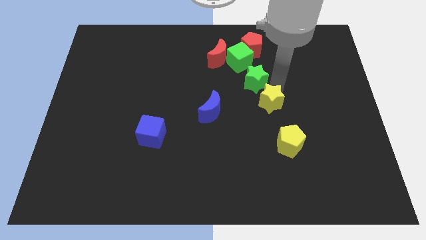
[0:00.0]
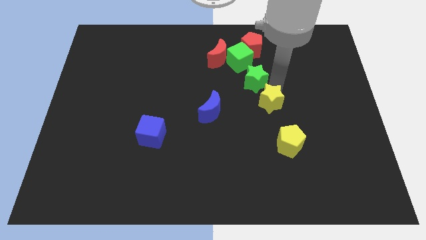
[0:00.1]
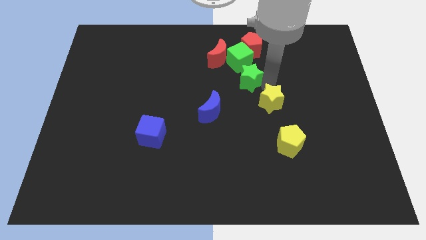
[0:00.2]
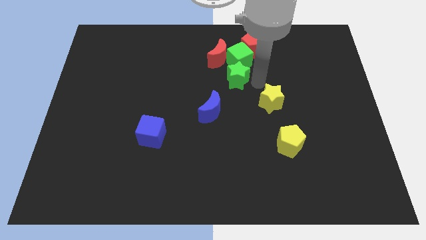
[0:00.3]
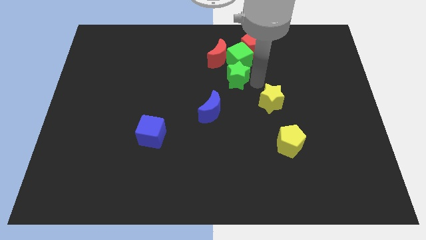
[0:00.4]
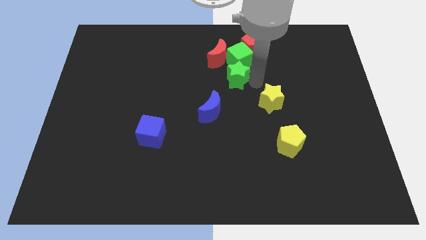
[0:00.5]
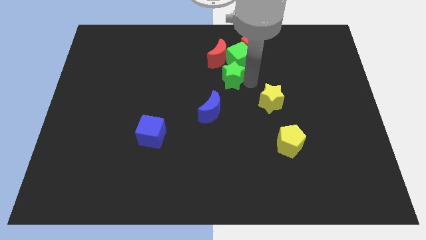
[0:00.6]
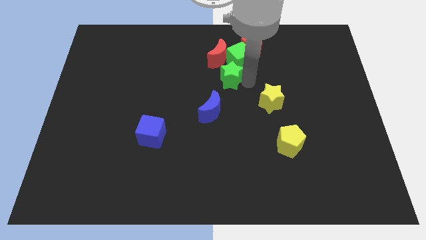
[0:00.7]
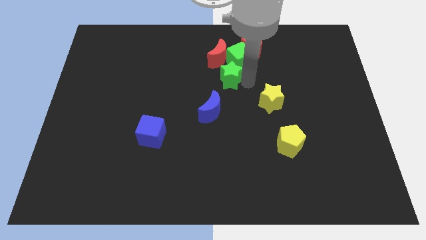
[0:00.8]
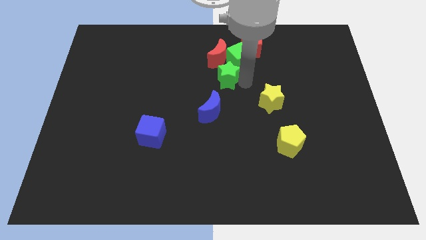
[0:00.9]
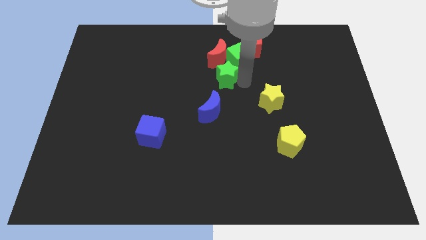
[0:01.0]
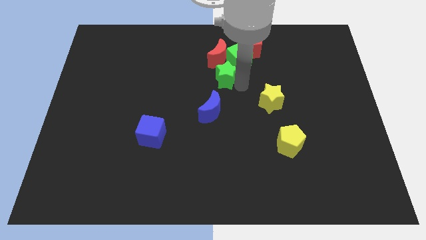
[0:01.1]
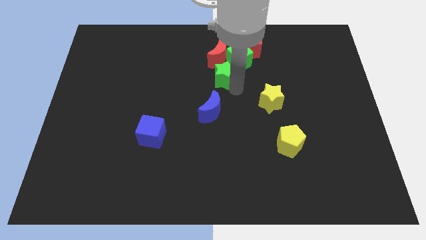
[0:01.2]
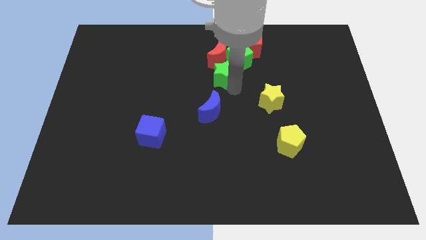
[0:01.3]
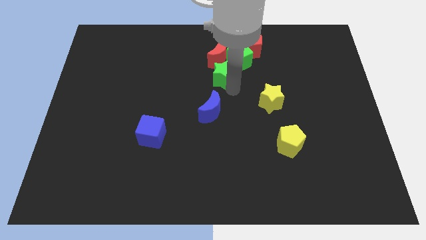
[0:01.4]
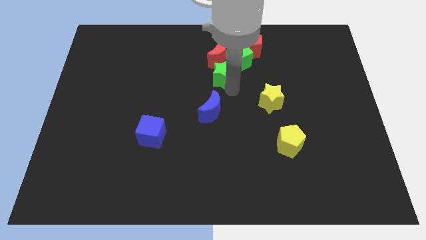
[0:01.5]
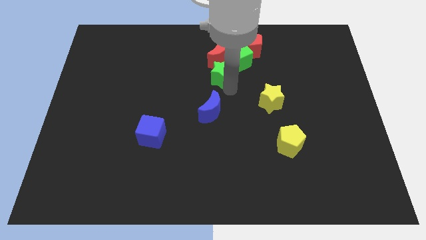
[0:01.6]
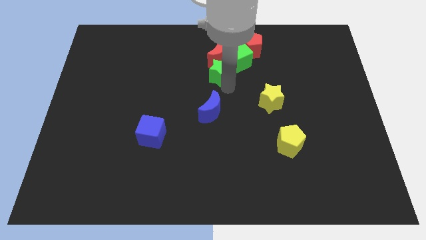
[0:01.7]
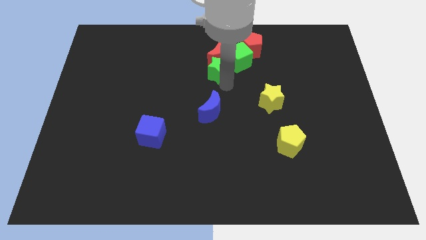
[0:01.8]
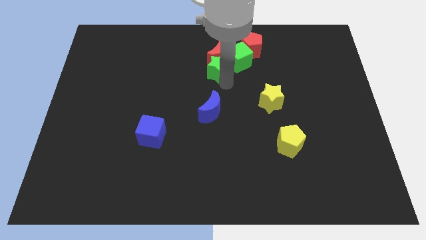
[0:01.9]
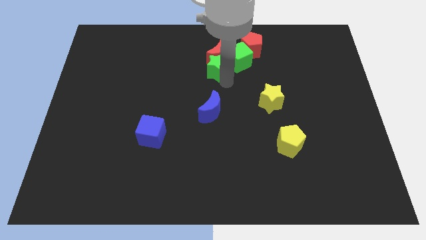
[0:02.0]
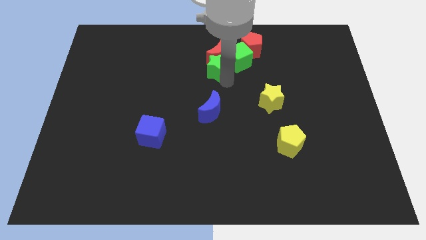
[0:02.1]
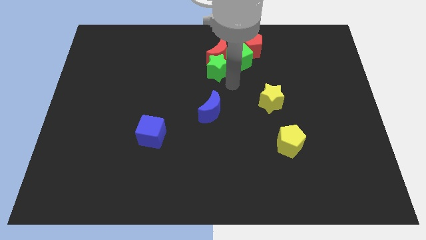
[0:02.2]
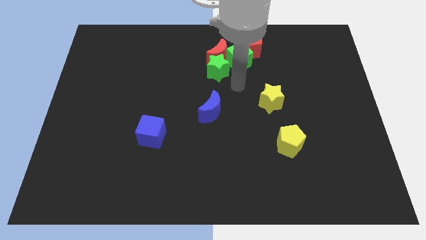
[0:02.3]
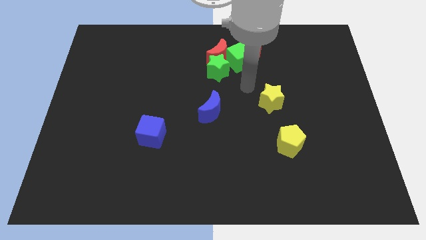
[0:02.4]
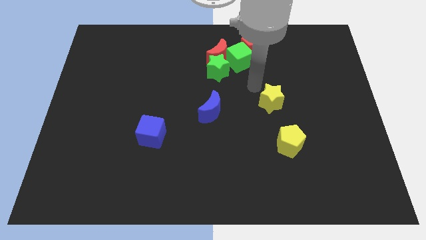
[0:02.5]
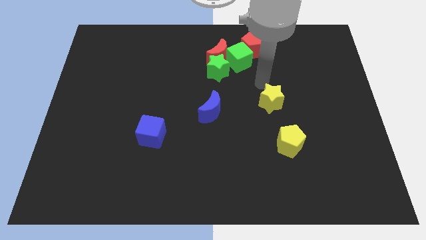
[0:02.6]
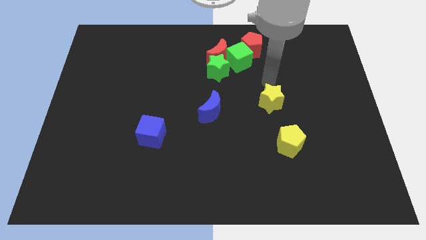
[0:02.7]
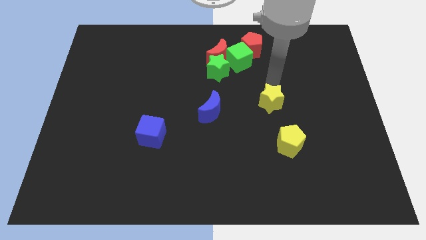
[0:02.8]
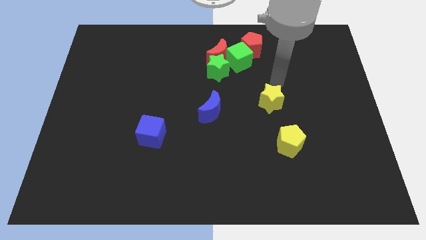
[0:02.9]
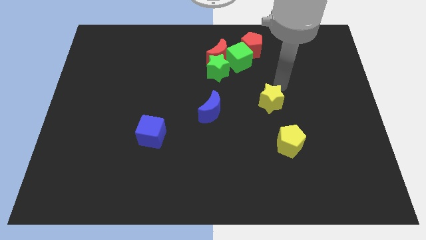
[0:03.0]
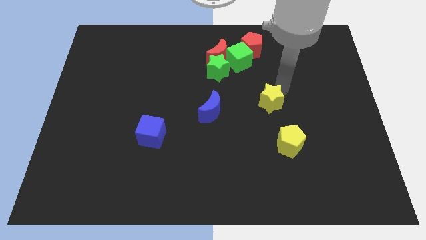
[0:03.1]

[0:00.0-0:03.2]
place green star vertically below the red moon

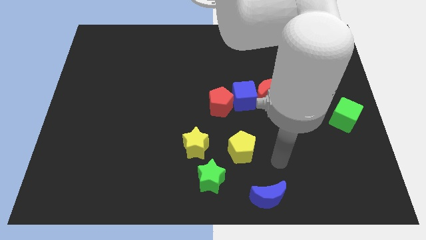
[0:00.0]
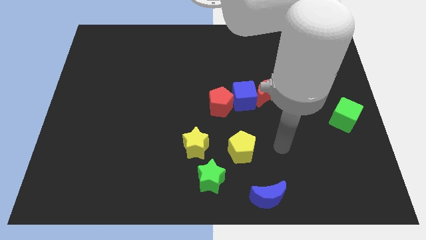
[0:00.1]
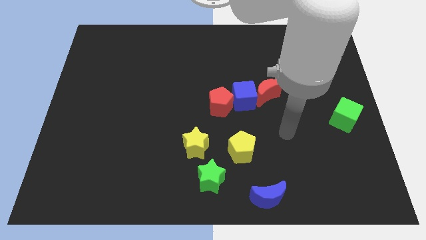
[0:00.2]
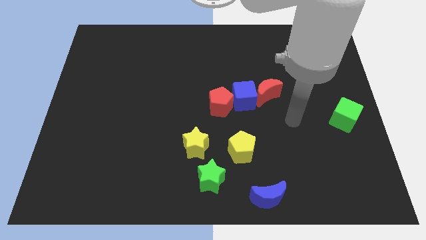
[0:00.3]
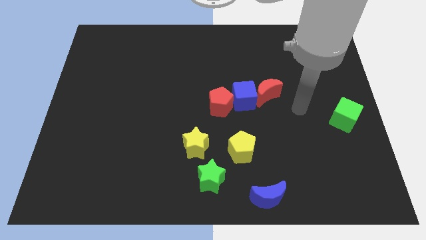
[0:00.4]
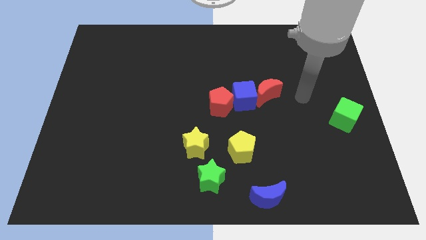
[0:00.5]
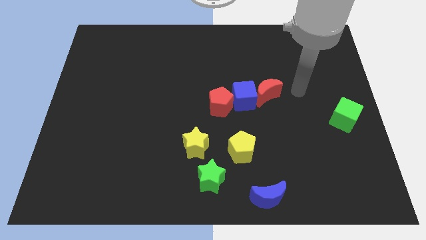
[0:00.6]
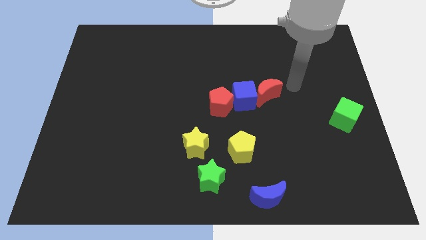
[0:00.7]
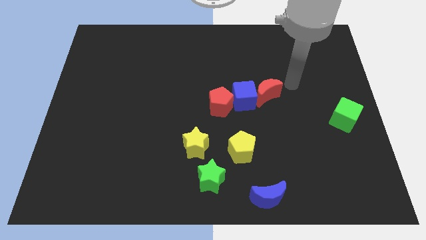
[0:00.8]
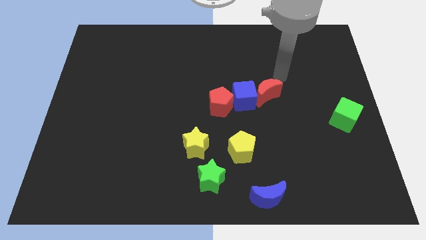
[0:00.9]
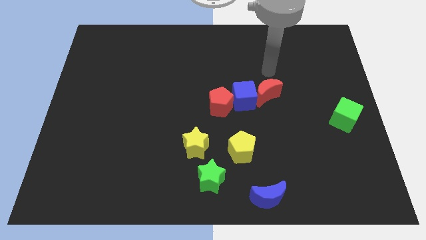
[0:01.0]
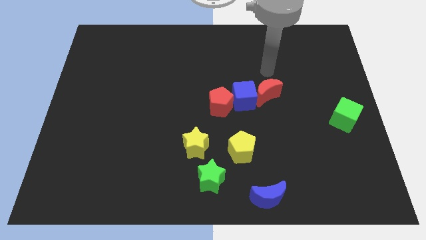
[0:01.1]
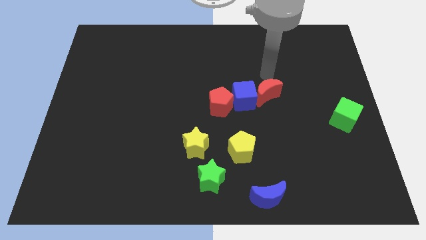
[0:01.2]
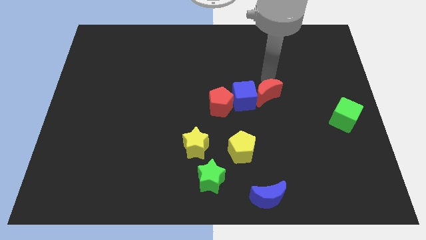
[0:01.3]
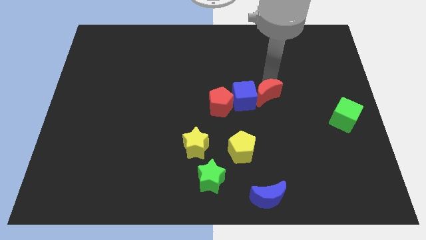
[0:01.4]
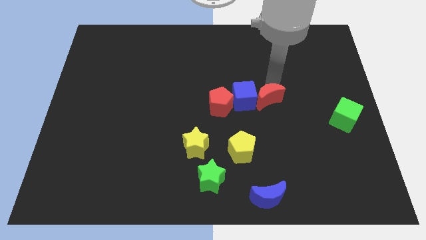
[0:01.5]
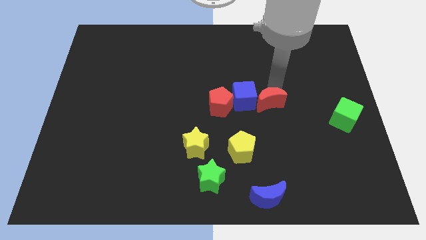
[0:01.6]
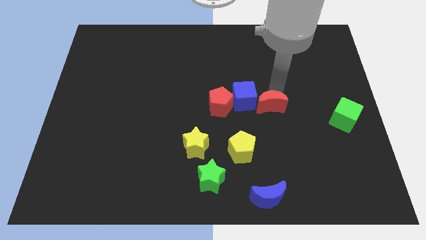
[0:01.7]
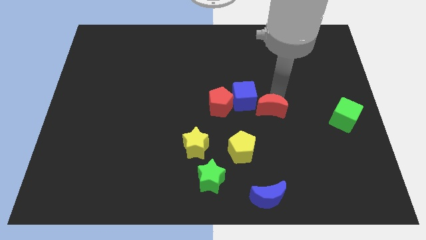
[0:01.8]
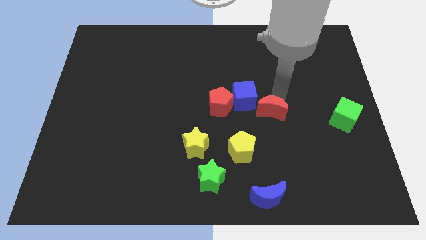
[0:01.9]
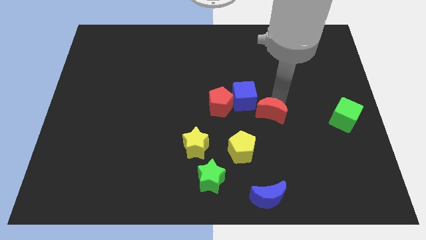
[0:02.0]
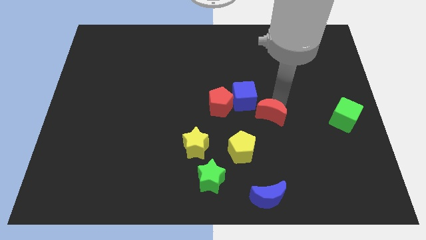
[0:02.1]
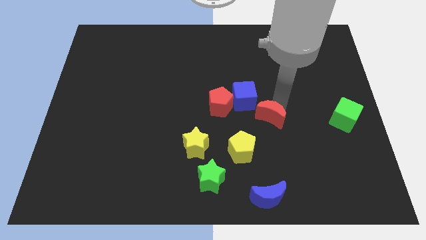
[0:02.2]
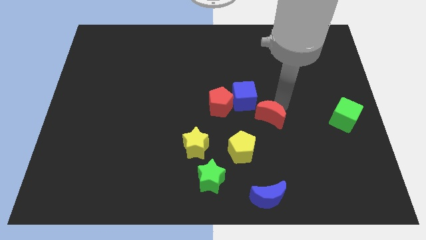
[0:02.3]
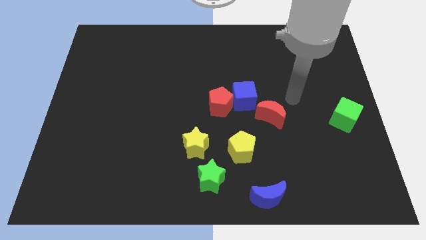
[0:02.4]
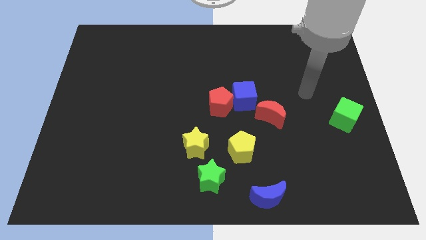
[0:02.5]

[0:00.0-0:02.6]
place the red moon diagonally to the top right to the yellow pentagon

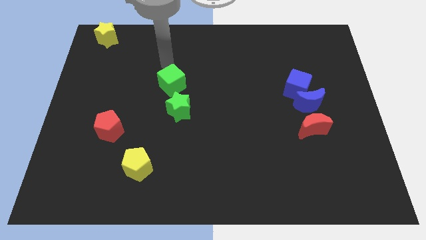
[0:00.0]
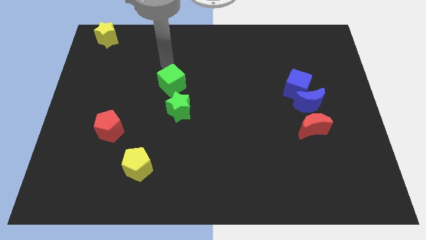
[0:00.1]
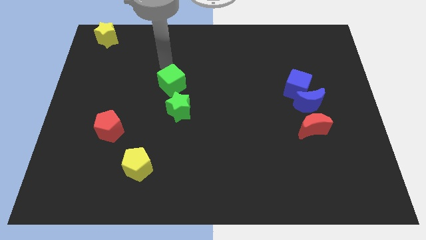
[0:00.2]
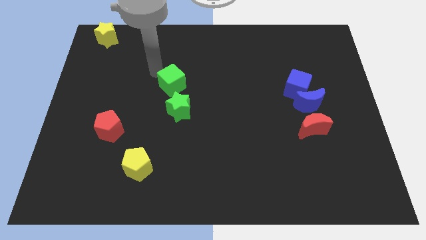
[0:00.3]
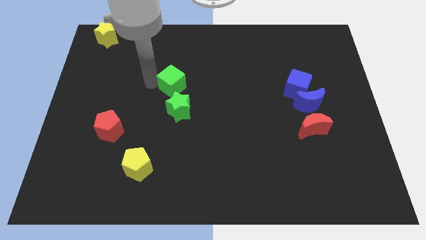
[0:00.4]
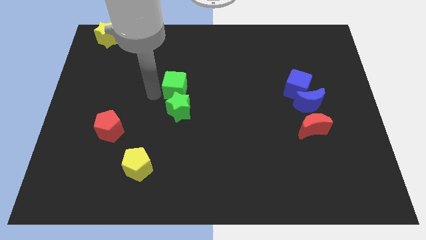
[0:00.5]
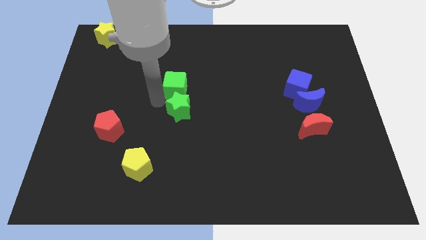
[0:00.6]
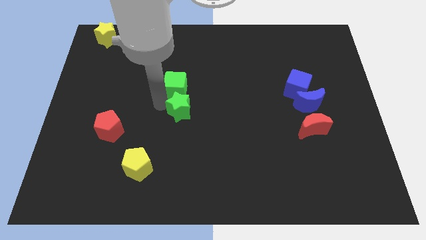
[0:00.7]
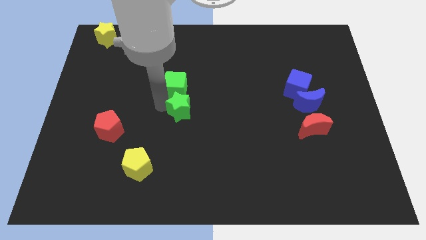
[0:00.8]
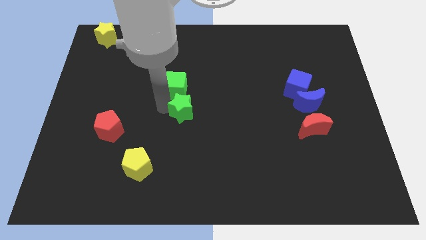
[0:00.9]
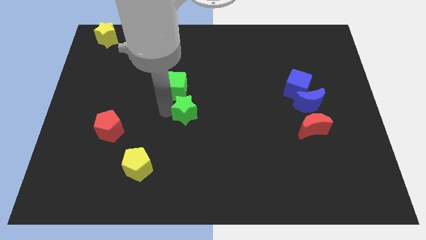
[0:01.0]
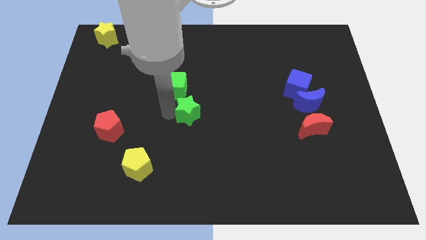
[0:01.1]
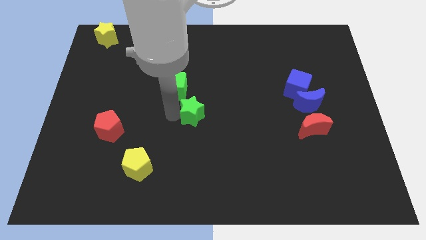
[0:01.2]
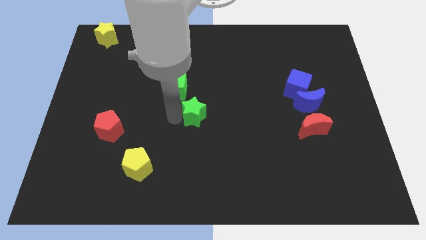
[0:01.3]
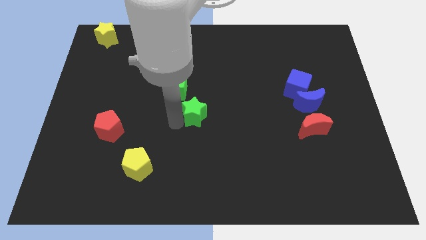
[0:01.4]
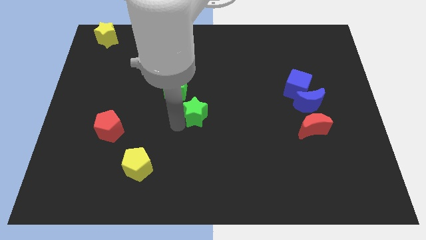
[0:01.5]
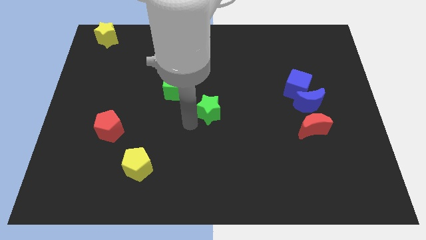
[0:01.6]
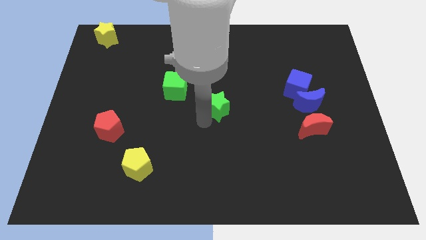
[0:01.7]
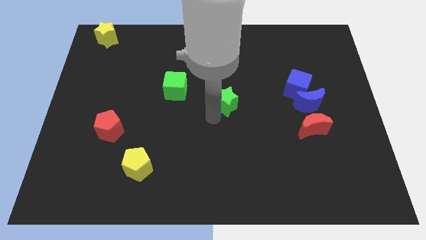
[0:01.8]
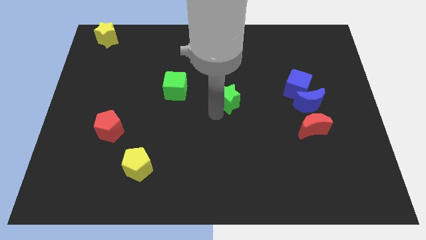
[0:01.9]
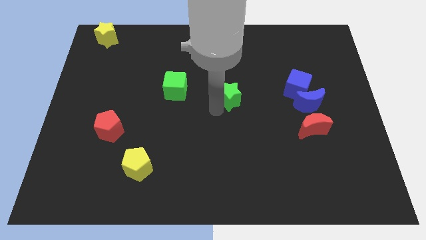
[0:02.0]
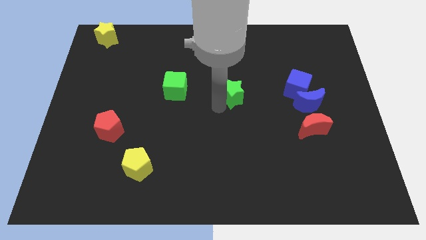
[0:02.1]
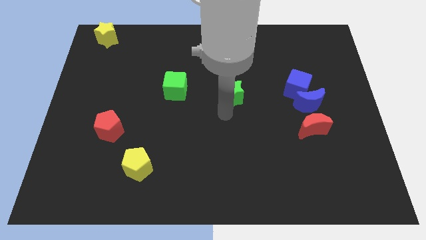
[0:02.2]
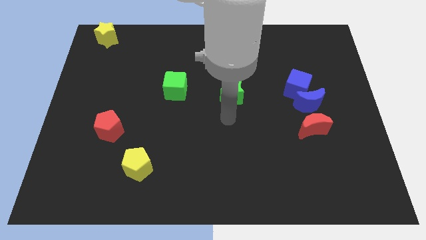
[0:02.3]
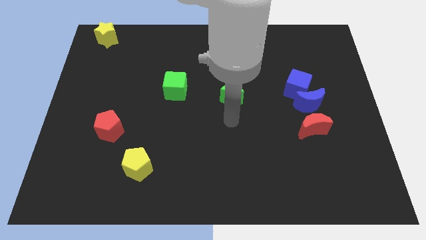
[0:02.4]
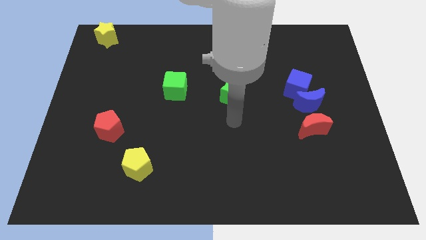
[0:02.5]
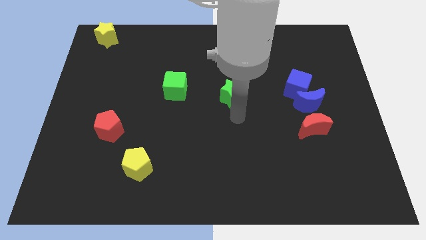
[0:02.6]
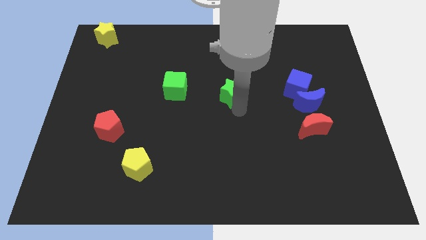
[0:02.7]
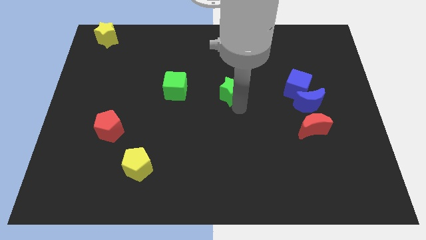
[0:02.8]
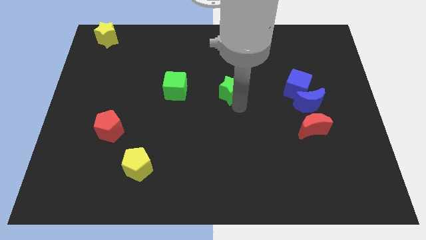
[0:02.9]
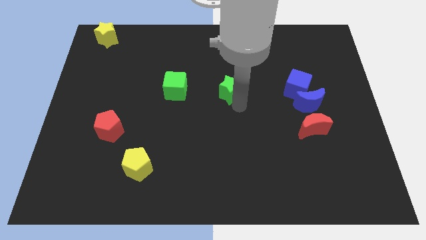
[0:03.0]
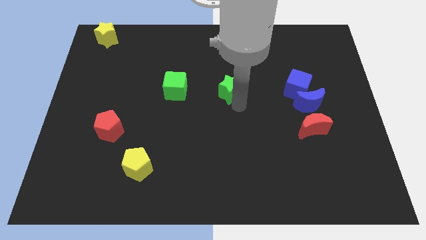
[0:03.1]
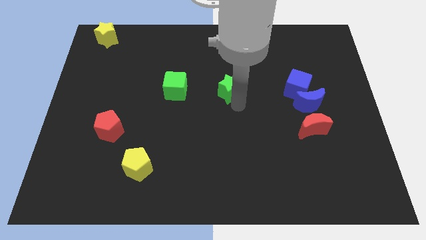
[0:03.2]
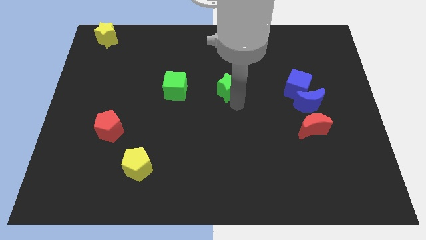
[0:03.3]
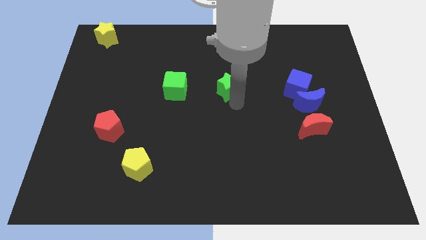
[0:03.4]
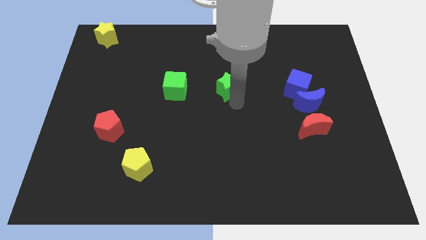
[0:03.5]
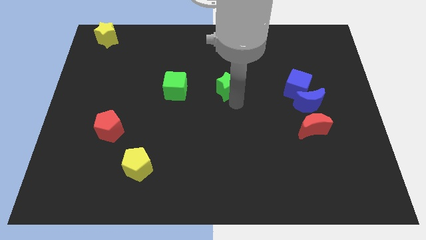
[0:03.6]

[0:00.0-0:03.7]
move the green star towards right of the green cube
